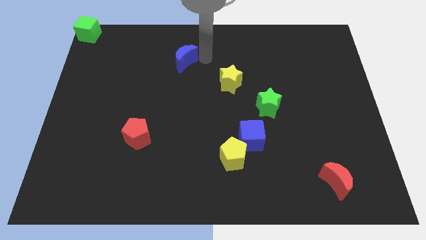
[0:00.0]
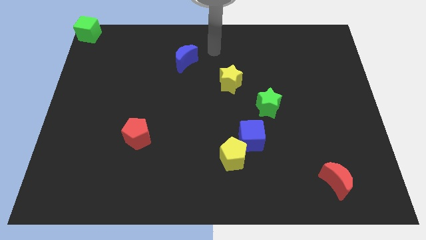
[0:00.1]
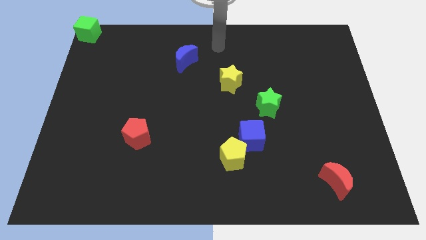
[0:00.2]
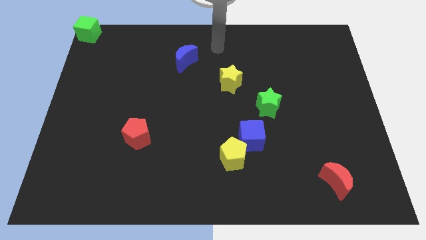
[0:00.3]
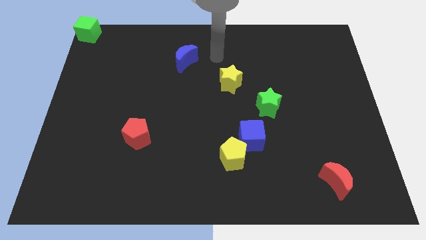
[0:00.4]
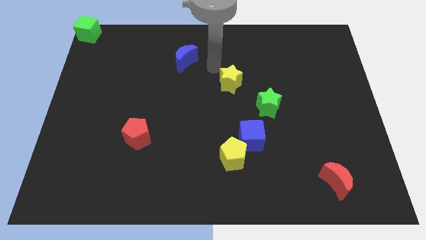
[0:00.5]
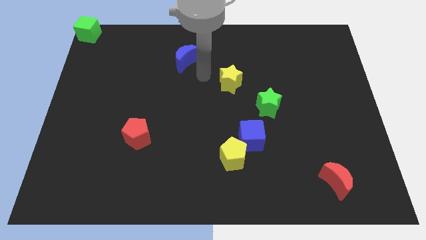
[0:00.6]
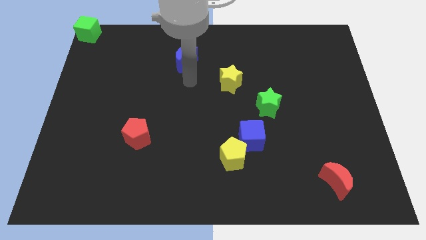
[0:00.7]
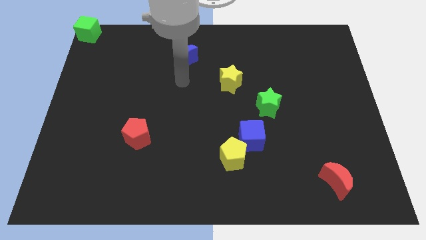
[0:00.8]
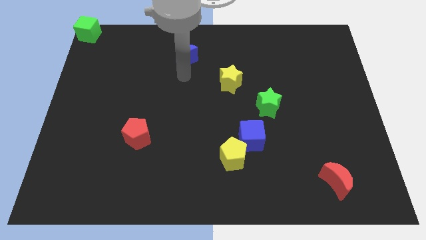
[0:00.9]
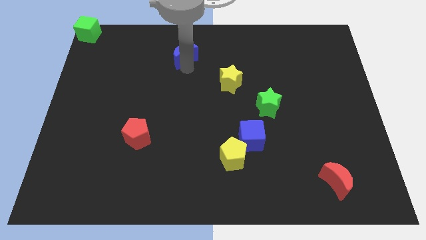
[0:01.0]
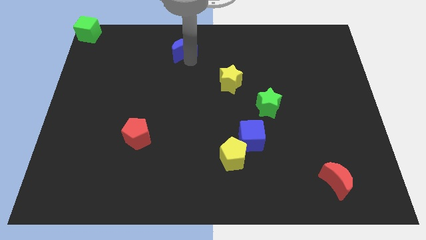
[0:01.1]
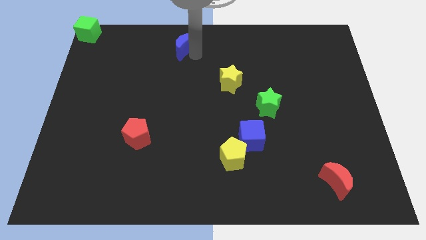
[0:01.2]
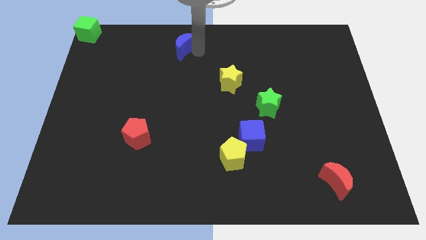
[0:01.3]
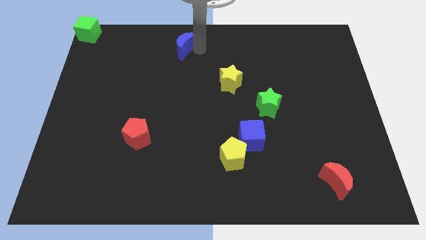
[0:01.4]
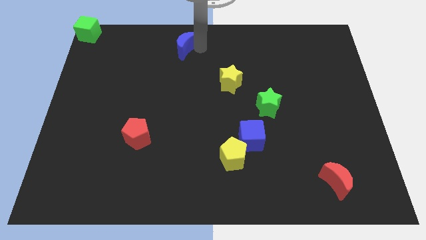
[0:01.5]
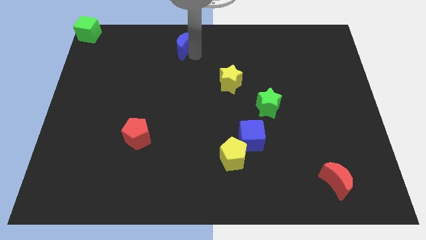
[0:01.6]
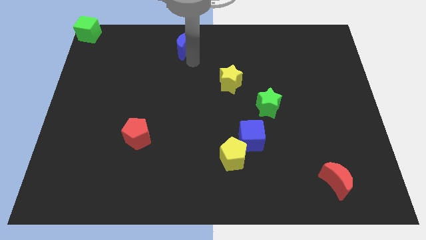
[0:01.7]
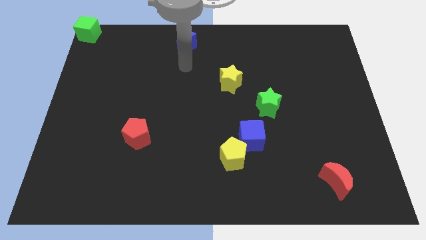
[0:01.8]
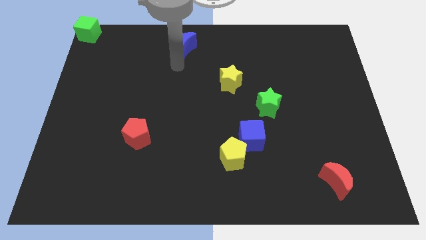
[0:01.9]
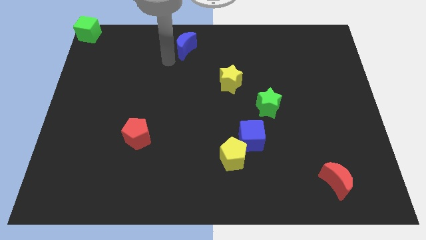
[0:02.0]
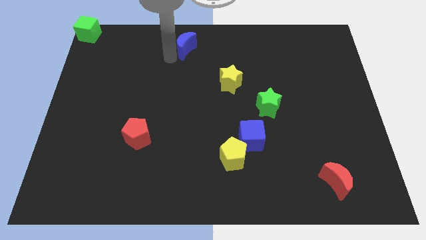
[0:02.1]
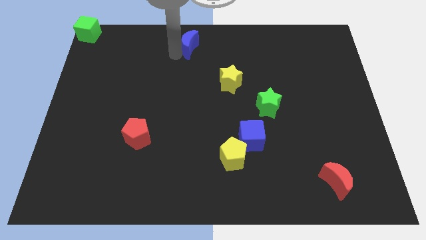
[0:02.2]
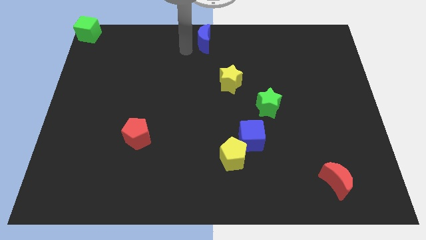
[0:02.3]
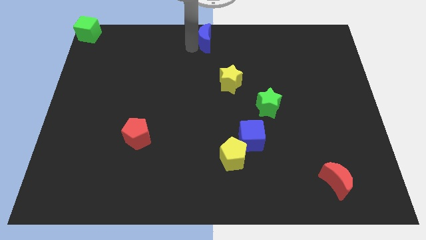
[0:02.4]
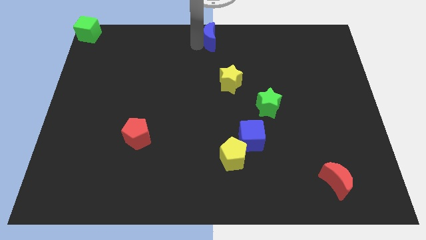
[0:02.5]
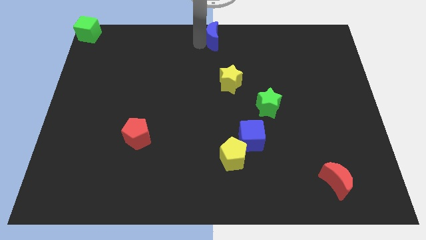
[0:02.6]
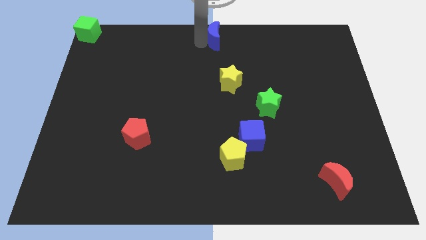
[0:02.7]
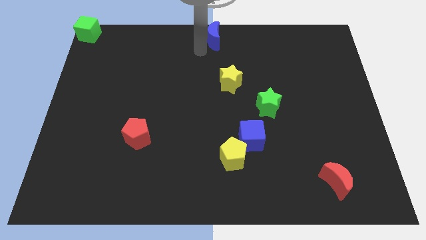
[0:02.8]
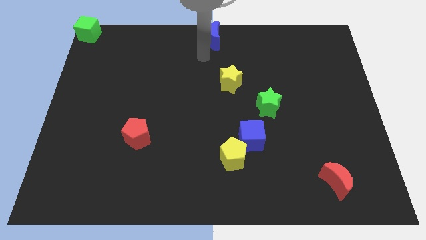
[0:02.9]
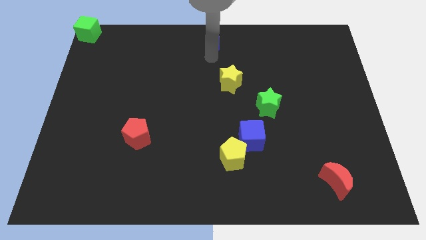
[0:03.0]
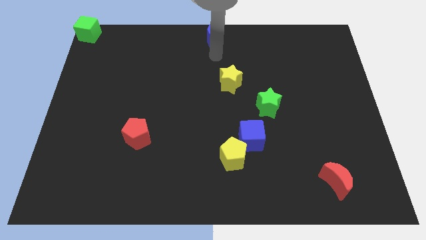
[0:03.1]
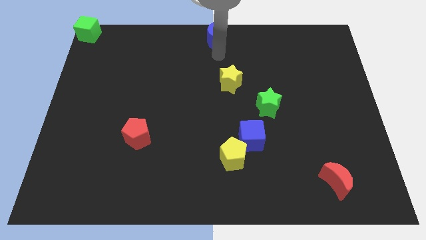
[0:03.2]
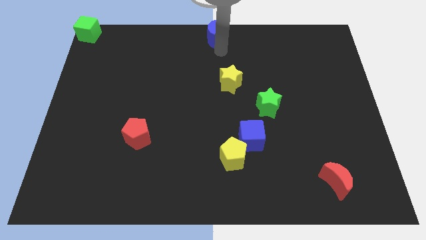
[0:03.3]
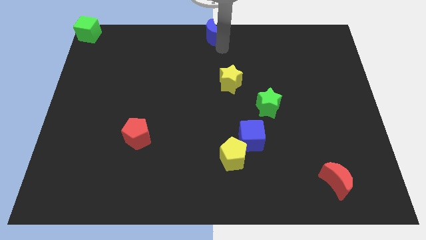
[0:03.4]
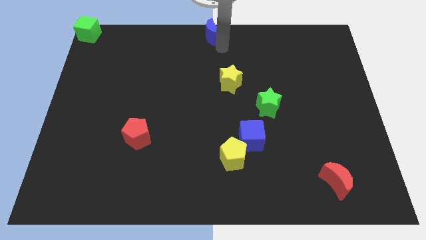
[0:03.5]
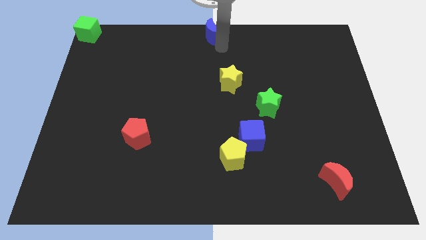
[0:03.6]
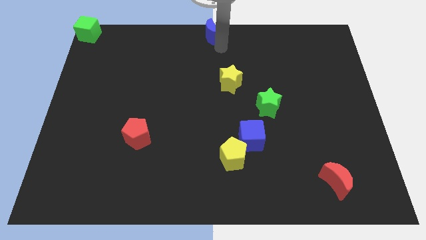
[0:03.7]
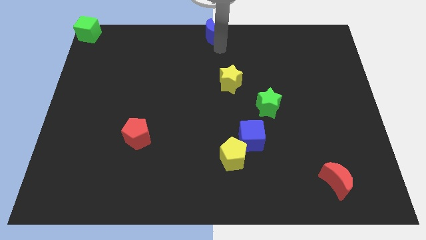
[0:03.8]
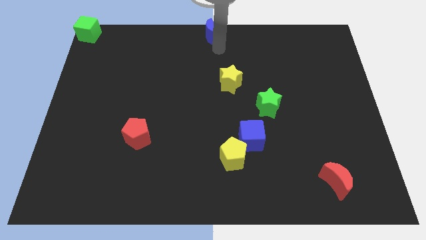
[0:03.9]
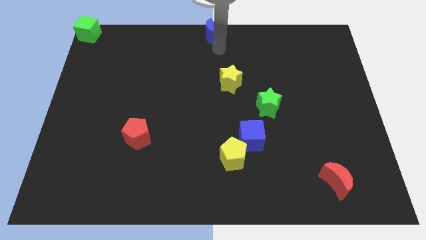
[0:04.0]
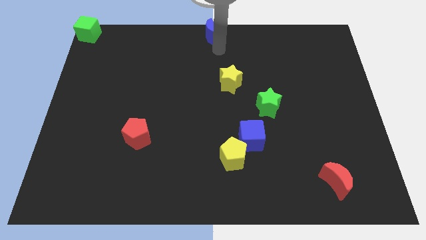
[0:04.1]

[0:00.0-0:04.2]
place the blue moon to the top center of the board

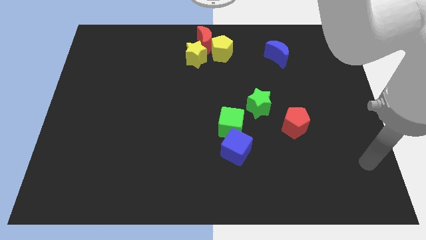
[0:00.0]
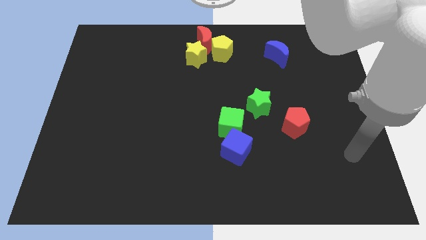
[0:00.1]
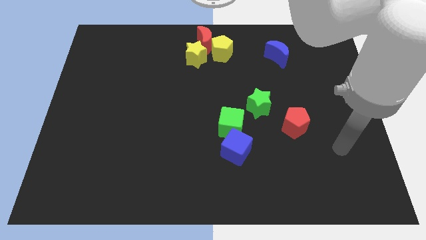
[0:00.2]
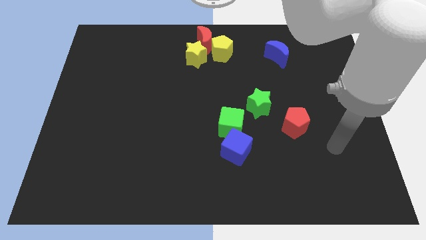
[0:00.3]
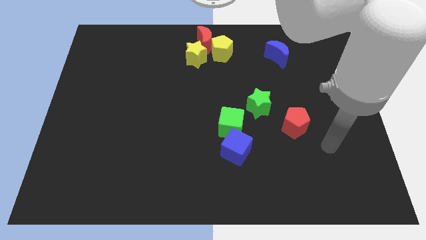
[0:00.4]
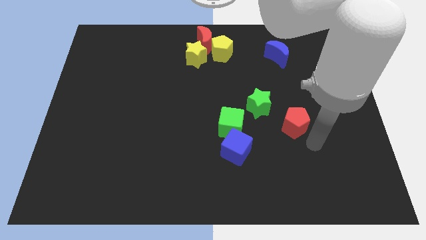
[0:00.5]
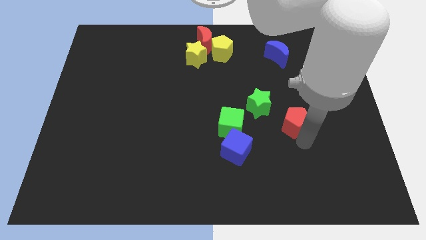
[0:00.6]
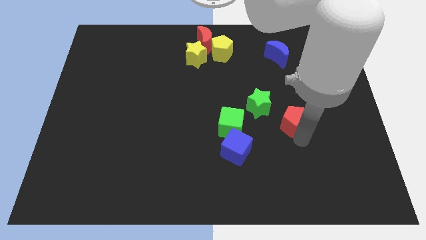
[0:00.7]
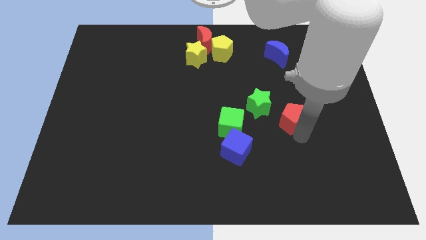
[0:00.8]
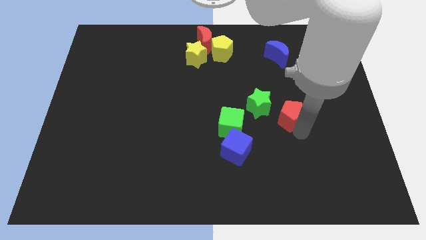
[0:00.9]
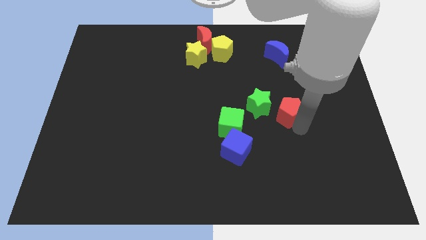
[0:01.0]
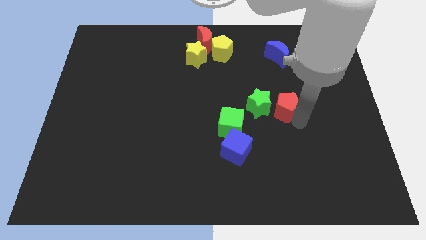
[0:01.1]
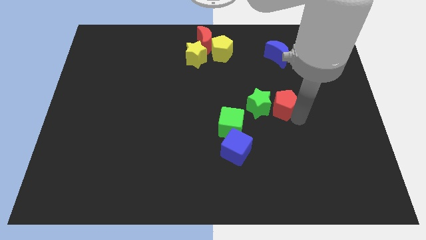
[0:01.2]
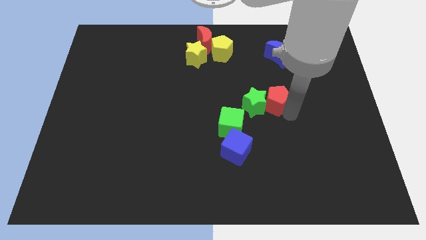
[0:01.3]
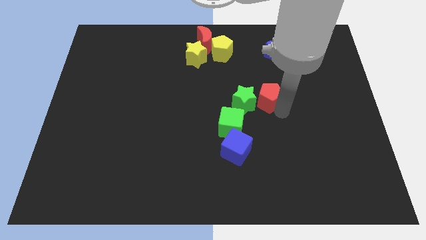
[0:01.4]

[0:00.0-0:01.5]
make the red pentagon to touch the right side of the green star

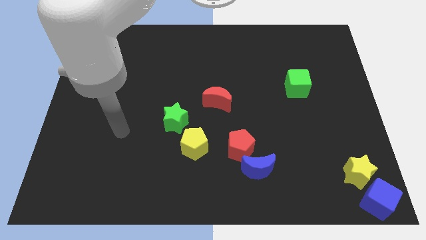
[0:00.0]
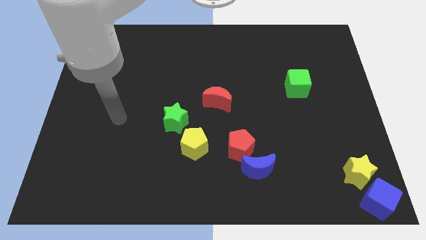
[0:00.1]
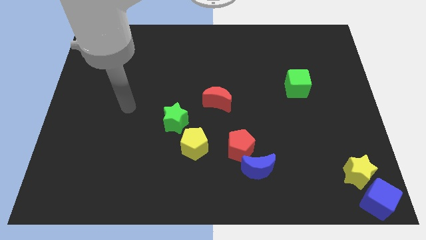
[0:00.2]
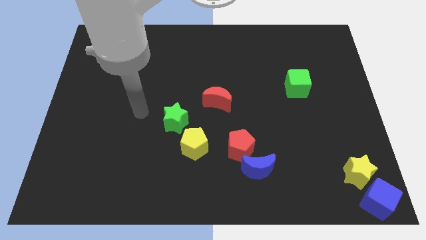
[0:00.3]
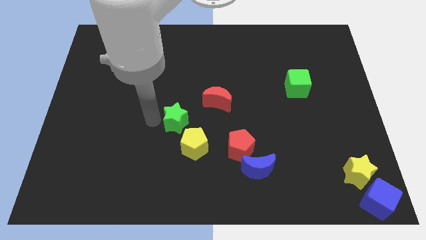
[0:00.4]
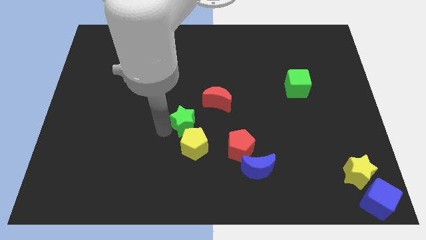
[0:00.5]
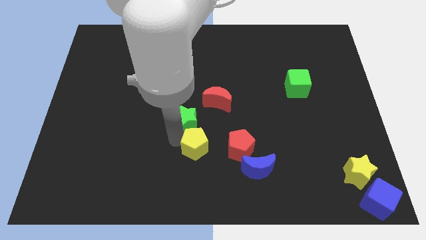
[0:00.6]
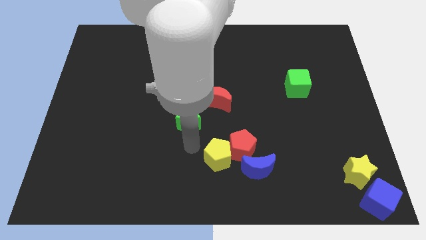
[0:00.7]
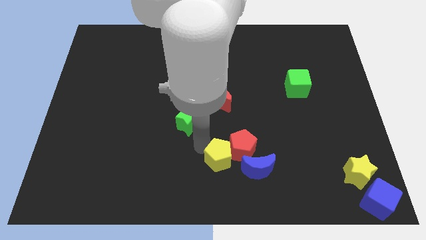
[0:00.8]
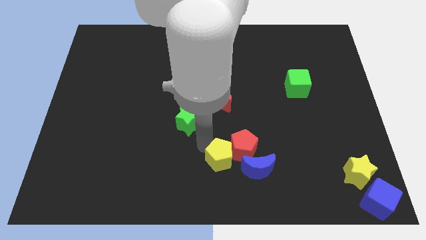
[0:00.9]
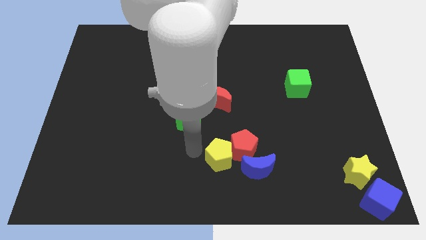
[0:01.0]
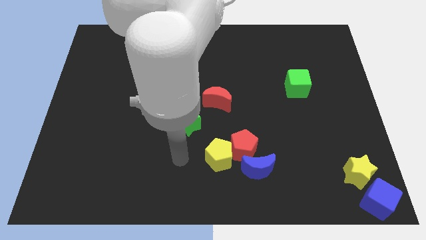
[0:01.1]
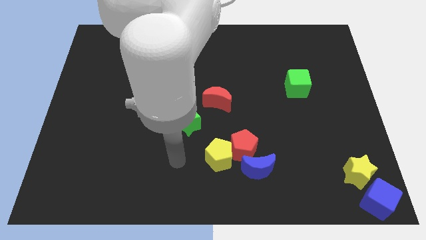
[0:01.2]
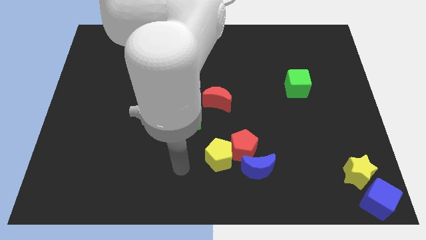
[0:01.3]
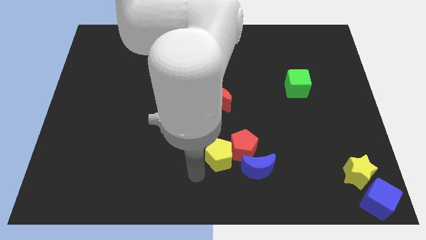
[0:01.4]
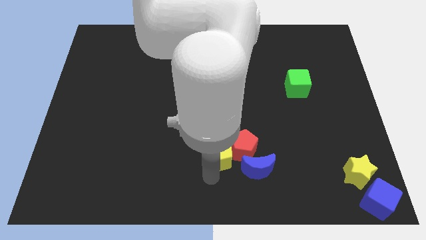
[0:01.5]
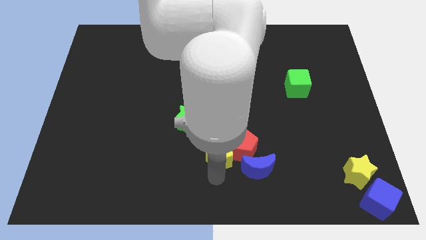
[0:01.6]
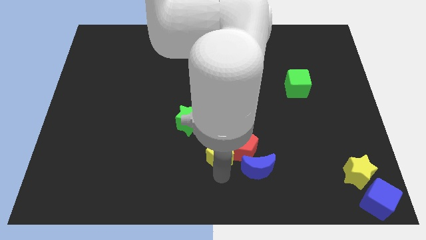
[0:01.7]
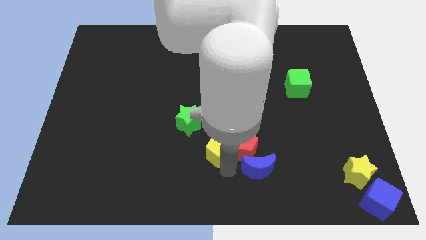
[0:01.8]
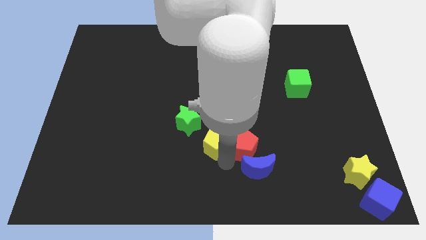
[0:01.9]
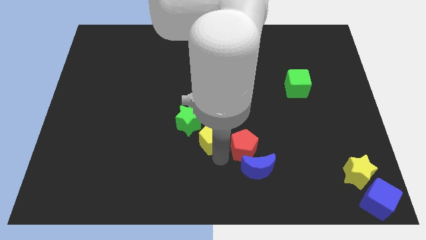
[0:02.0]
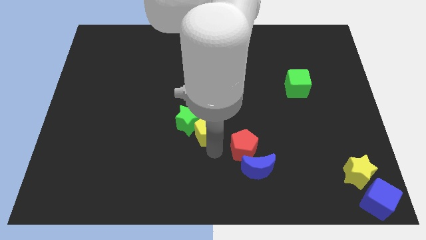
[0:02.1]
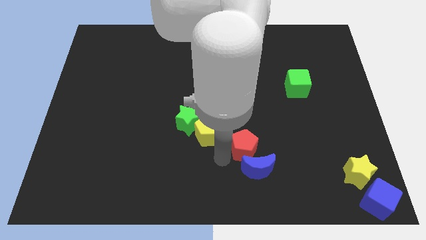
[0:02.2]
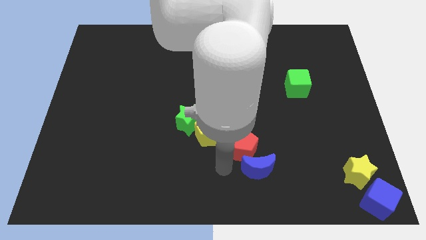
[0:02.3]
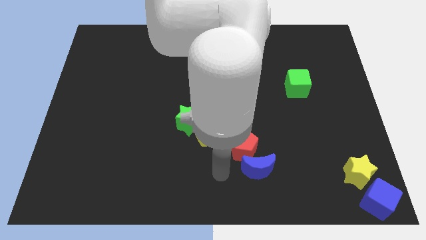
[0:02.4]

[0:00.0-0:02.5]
push the yellow pentagon into the green star

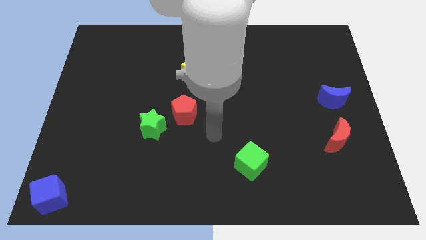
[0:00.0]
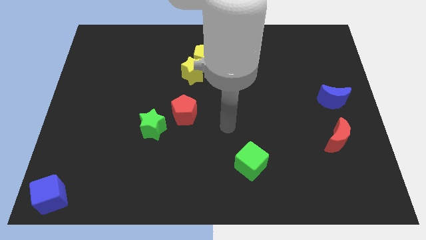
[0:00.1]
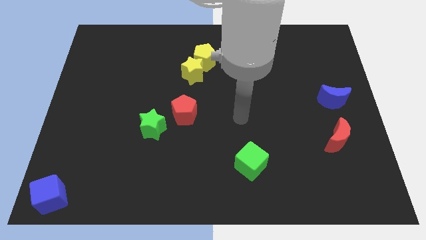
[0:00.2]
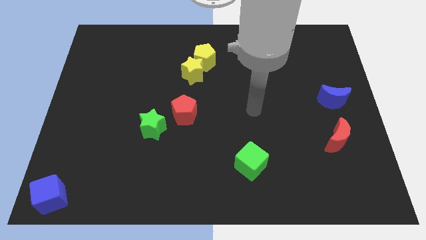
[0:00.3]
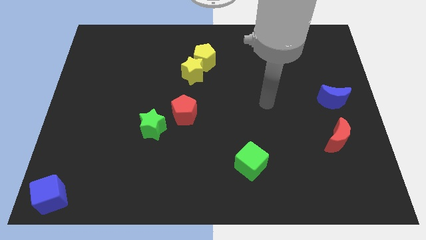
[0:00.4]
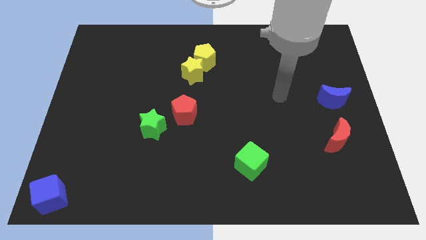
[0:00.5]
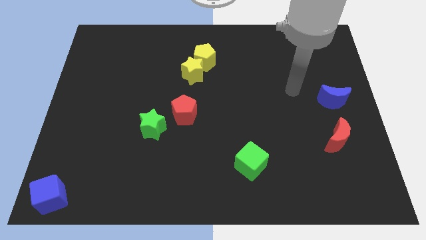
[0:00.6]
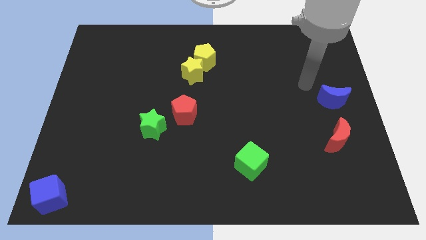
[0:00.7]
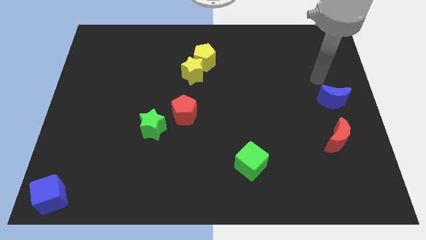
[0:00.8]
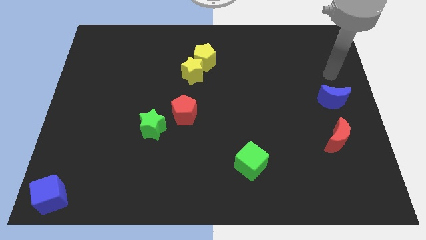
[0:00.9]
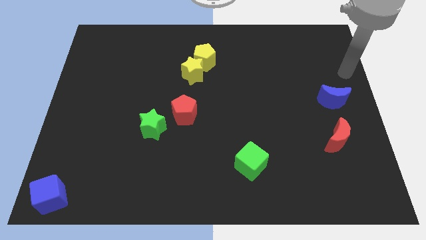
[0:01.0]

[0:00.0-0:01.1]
move your arm towards the right side of the board
